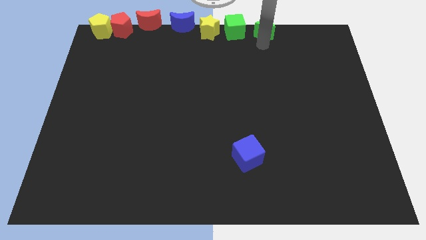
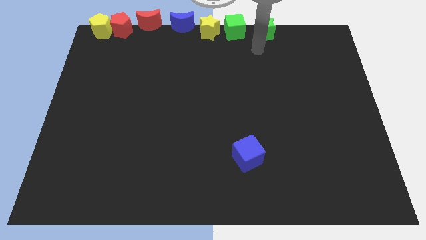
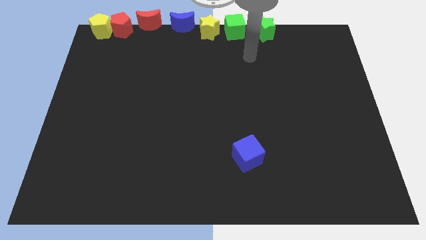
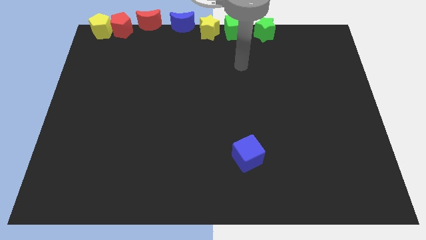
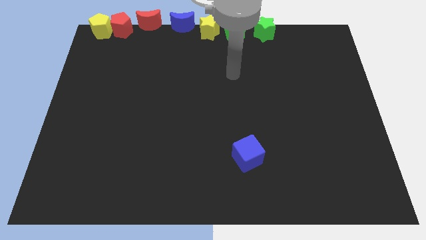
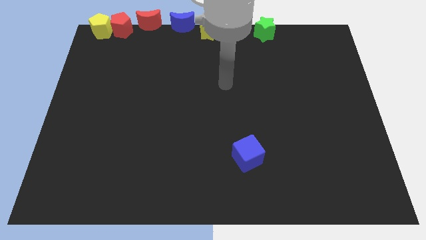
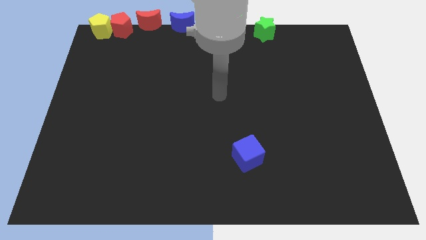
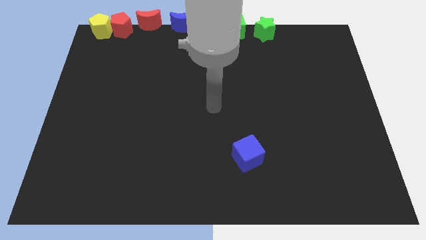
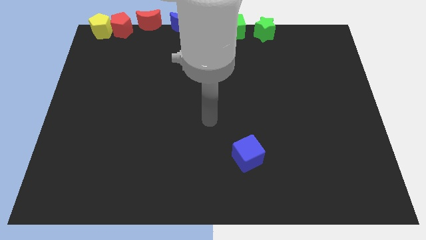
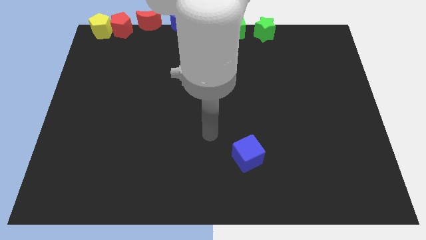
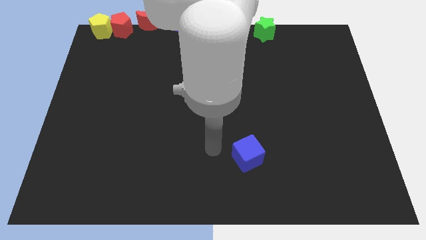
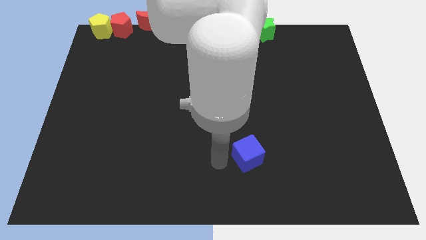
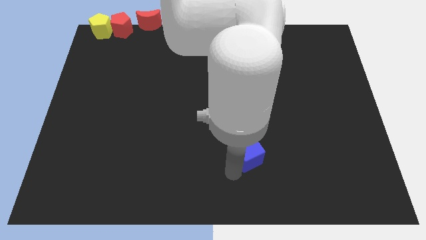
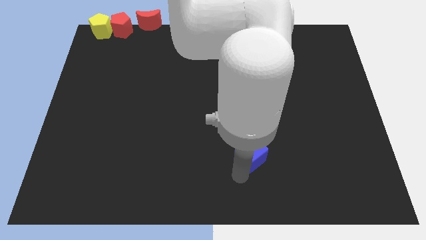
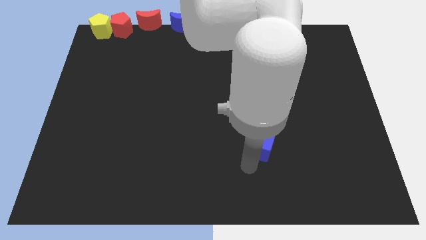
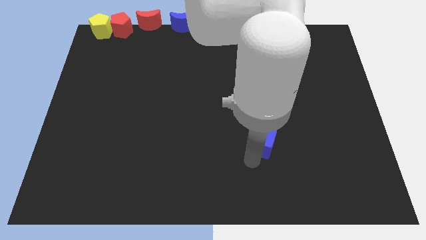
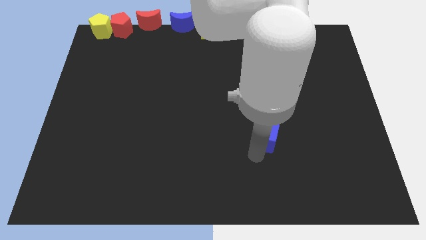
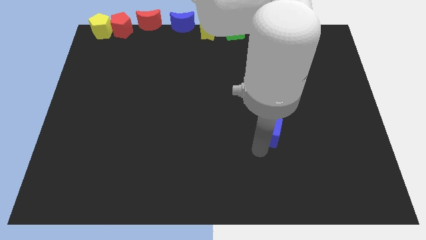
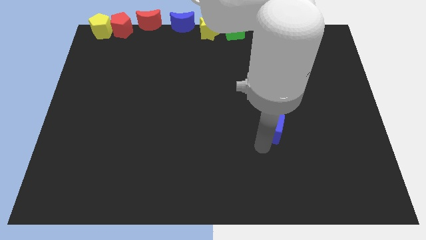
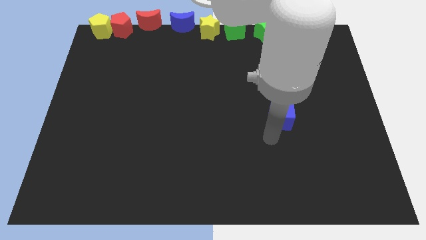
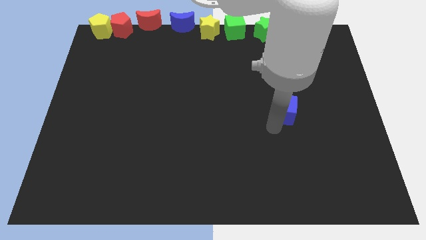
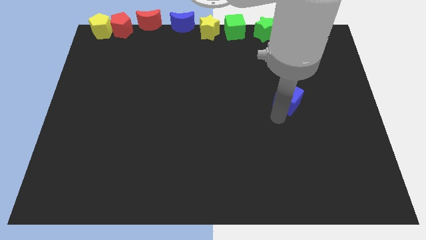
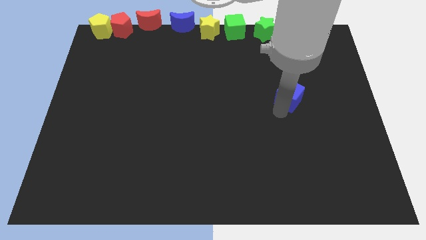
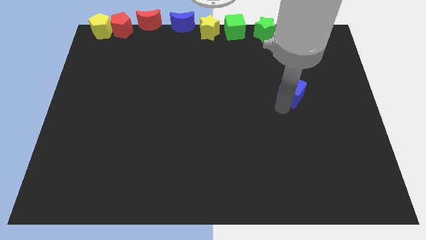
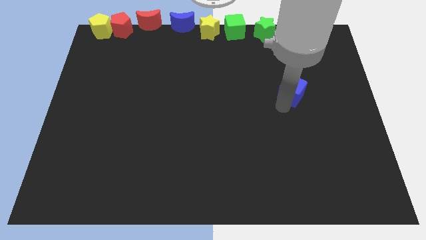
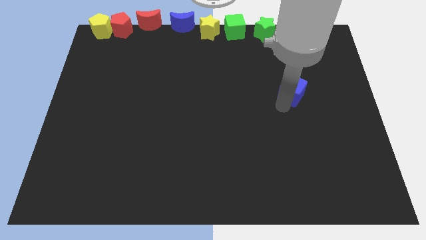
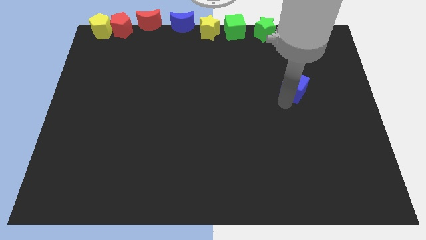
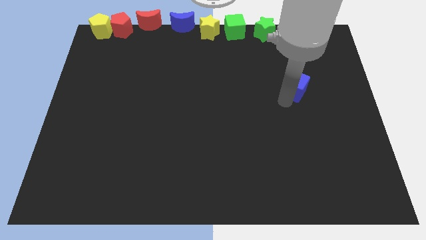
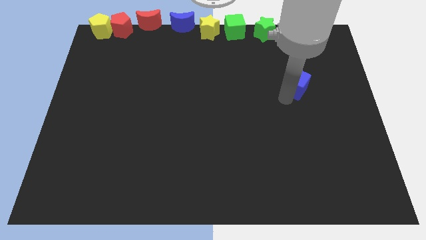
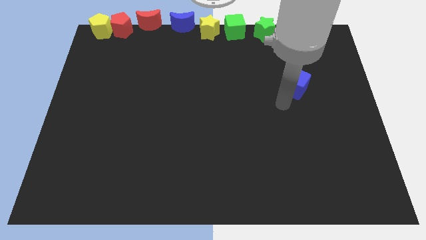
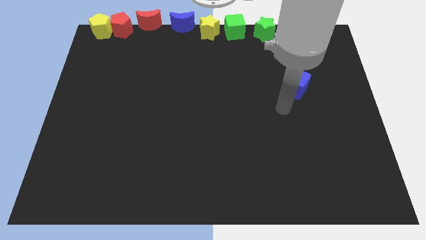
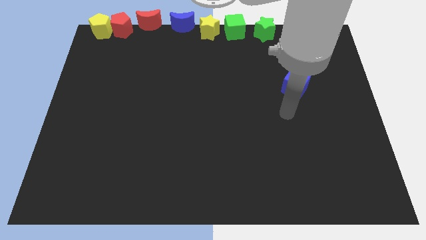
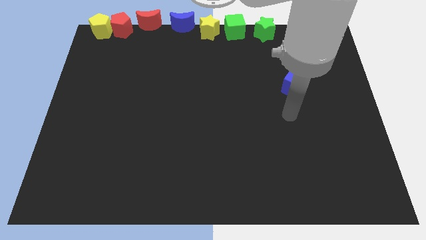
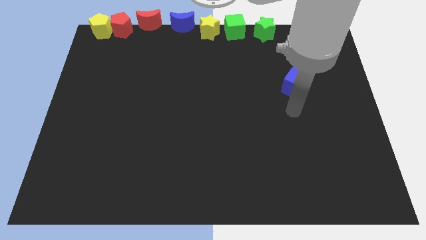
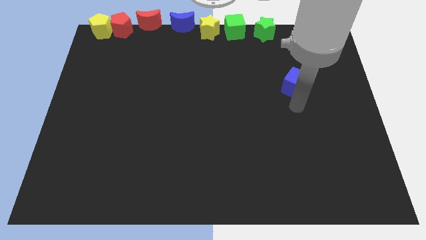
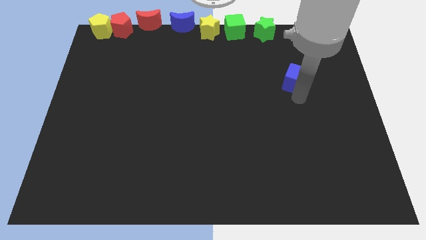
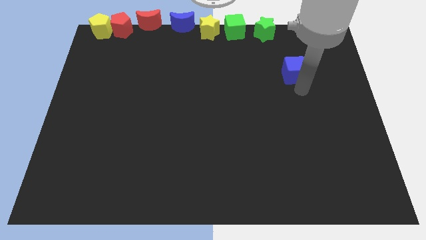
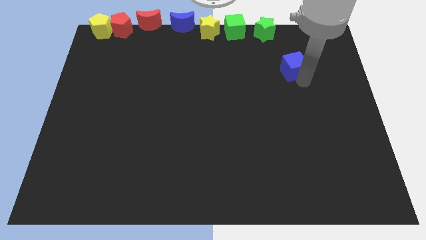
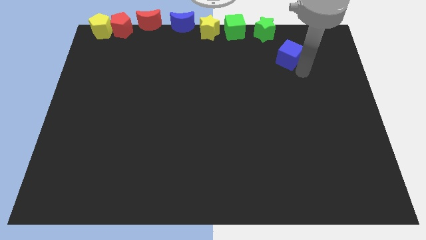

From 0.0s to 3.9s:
move the blue cube to the bottom right of the green star

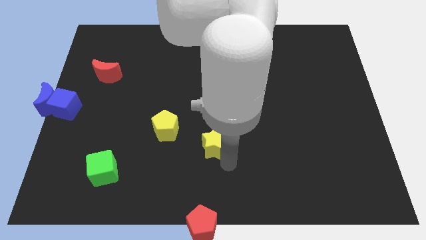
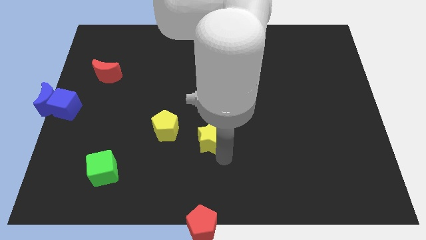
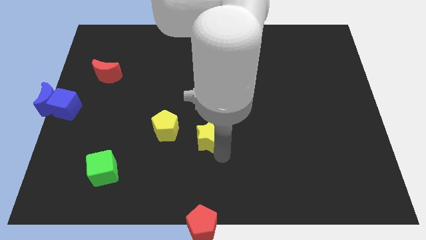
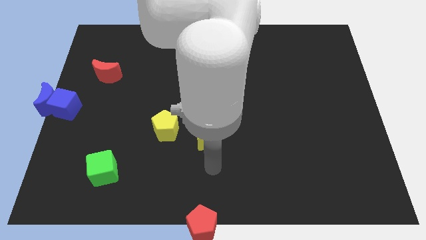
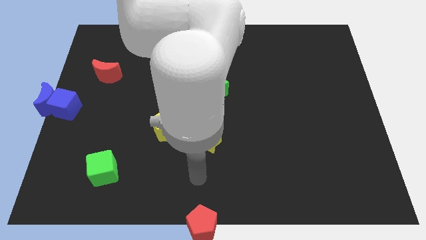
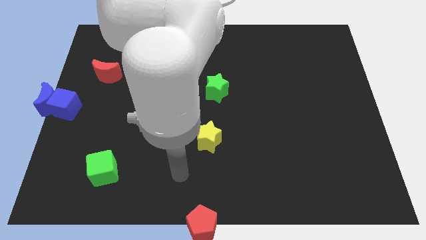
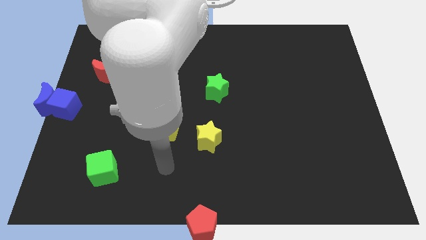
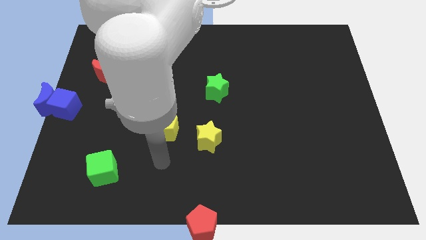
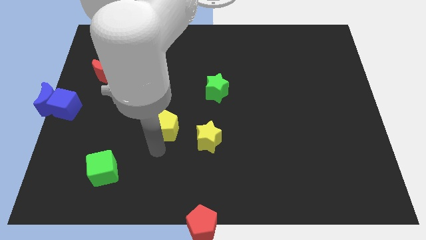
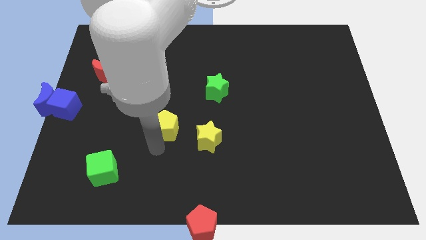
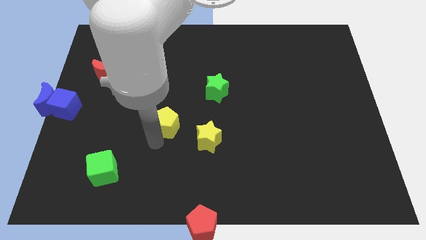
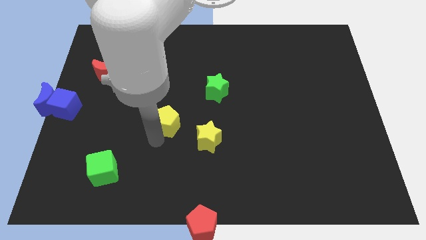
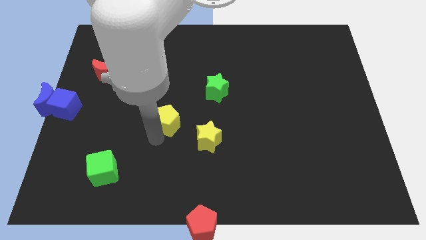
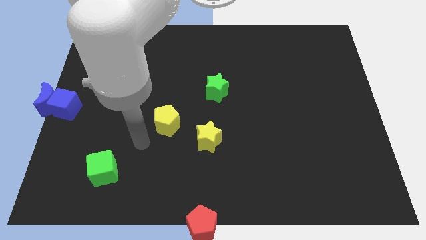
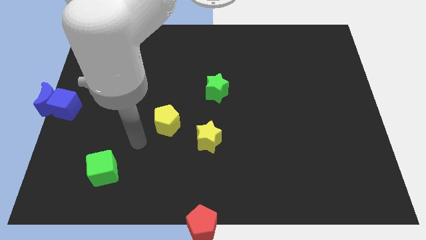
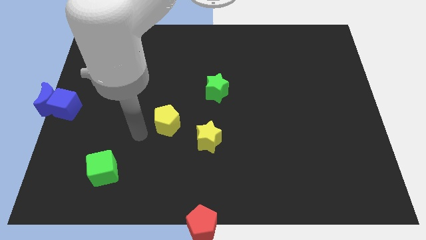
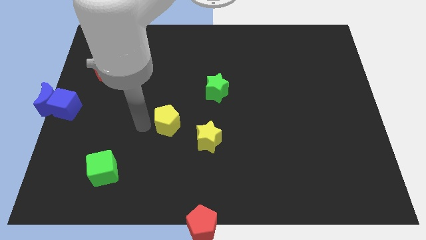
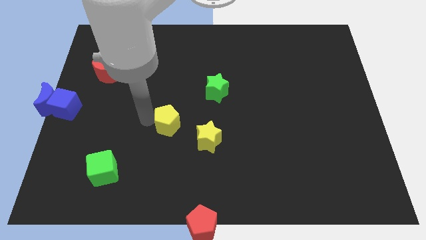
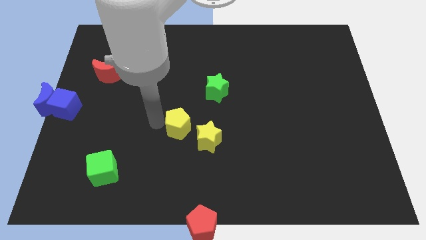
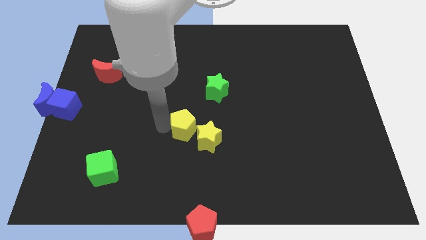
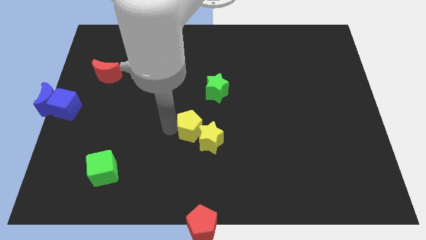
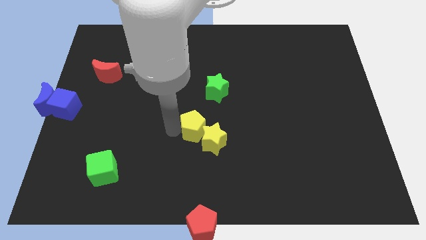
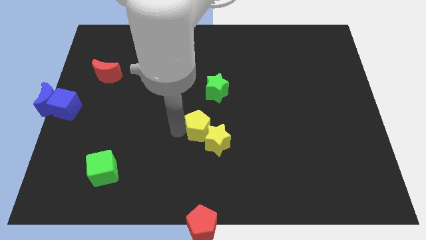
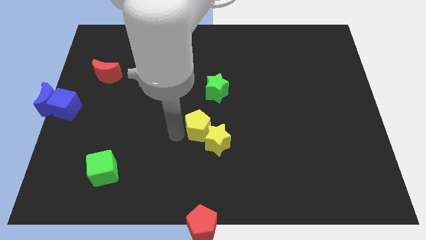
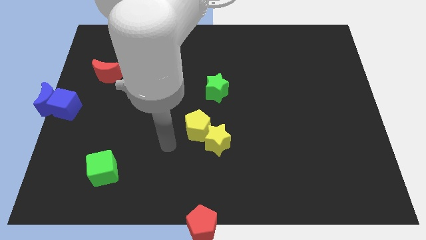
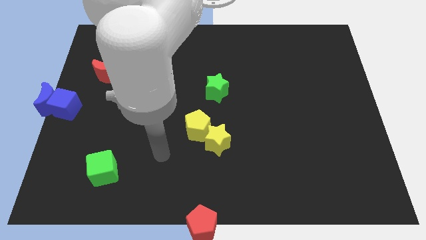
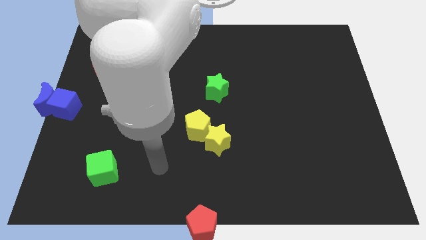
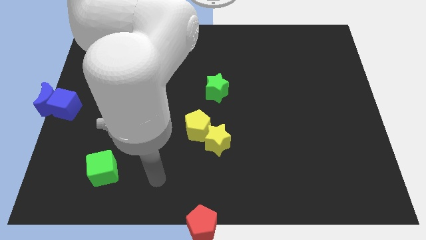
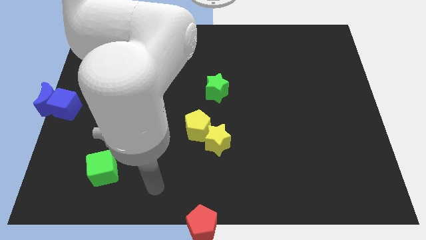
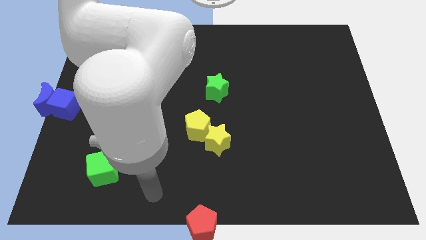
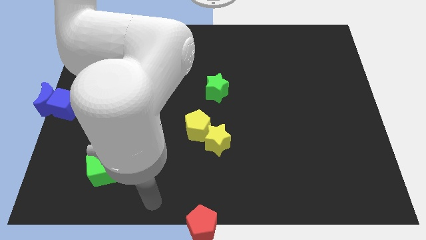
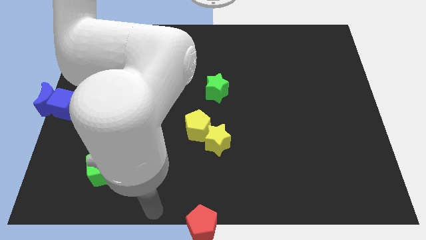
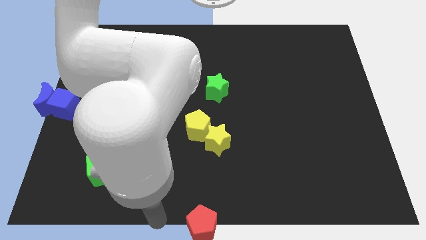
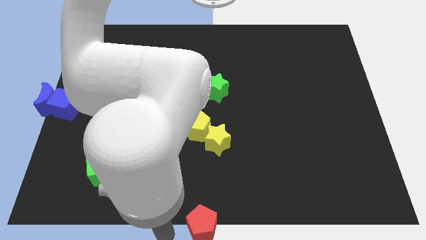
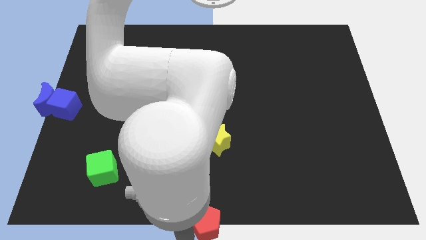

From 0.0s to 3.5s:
move the yellow pentagon into the yellow star

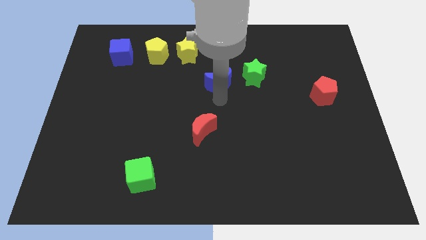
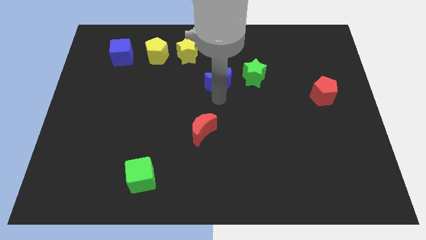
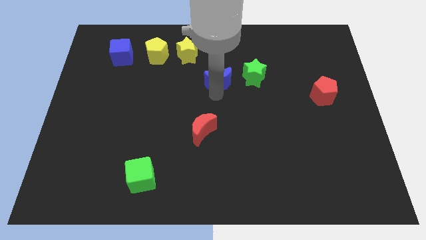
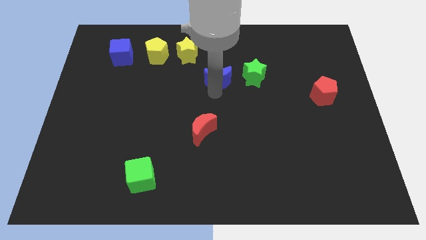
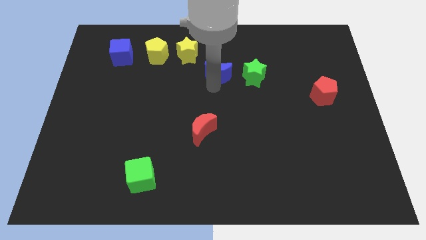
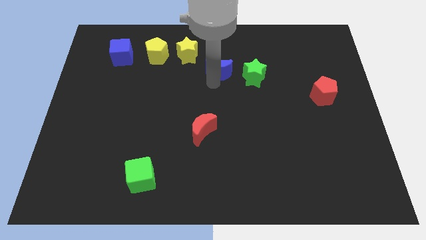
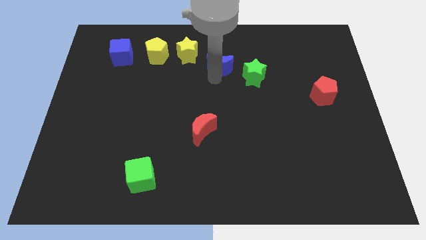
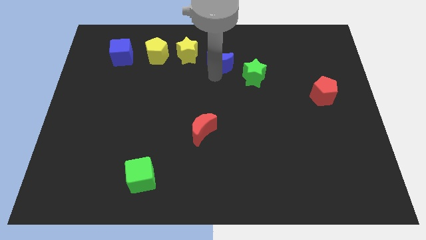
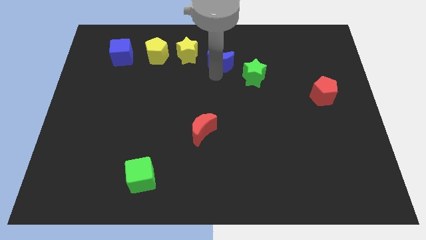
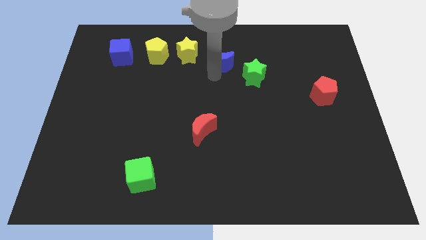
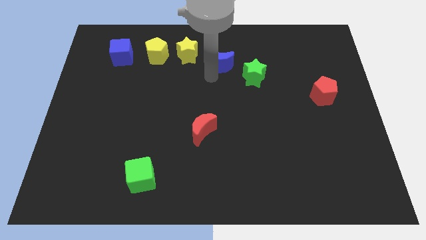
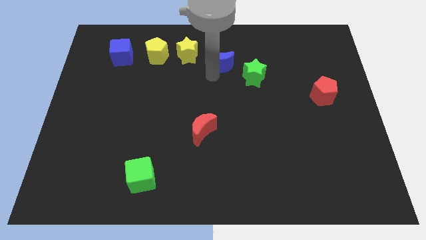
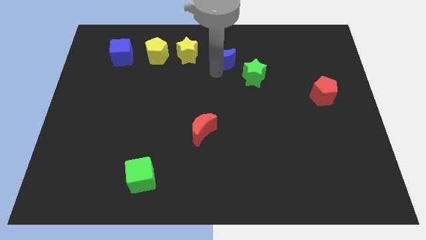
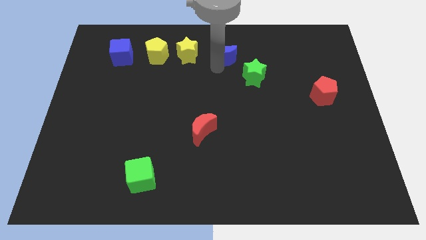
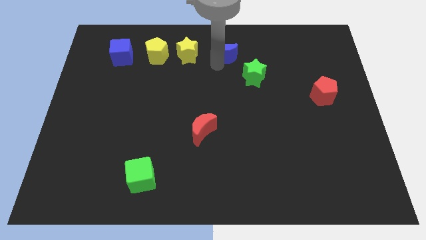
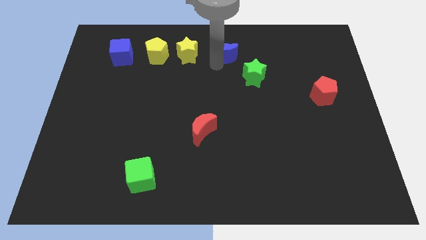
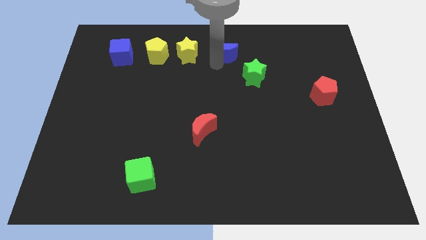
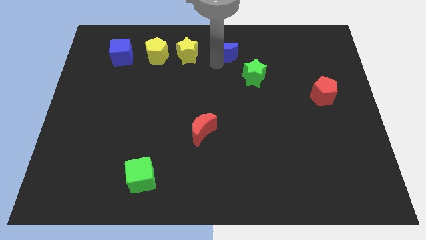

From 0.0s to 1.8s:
place the blue moon close to the yellow star
